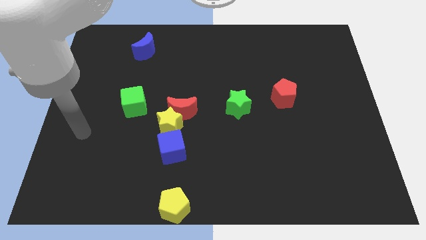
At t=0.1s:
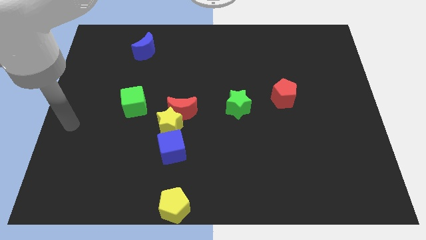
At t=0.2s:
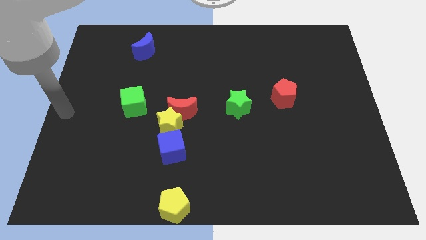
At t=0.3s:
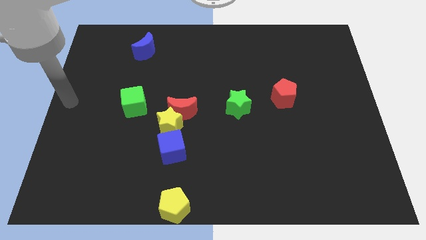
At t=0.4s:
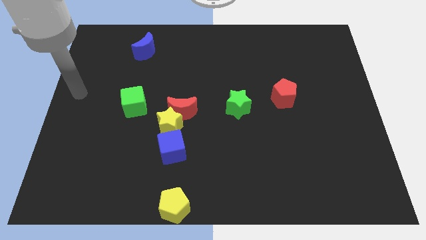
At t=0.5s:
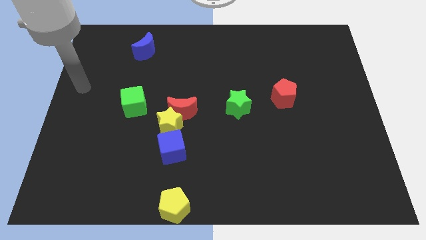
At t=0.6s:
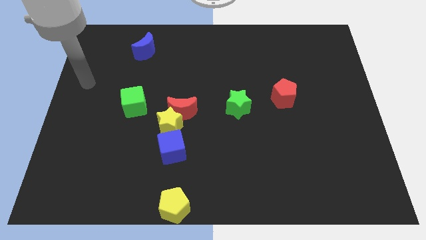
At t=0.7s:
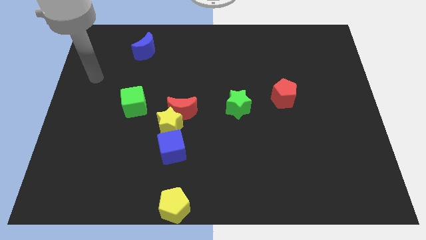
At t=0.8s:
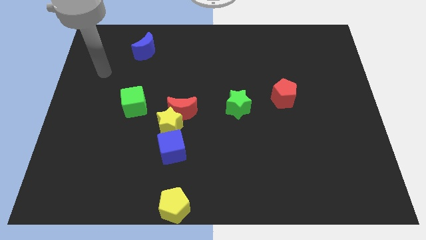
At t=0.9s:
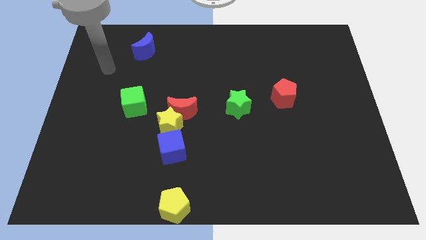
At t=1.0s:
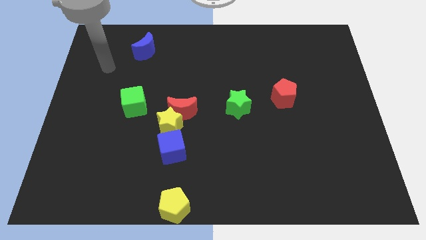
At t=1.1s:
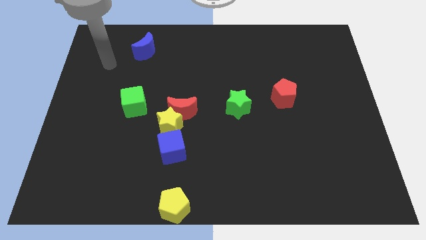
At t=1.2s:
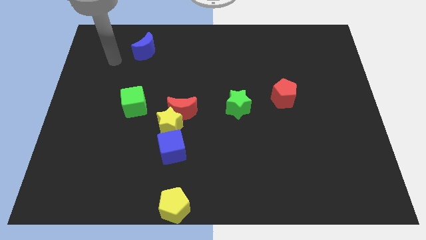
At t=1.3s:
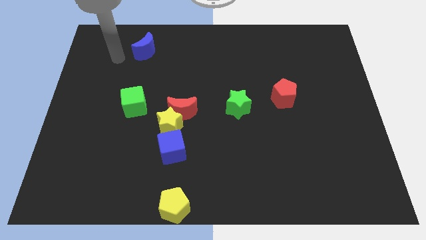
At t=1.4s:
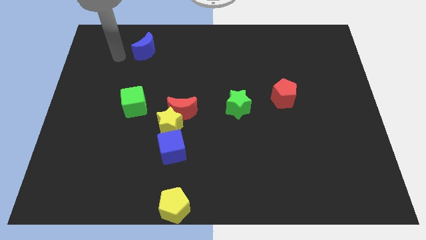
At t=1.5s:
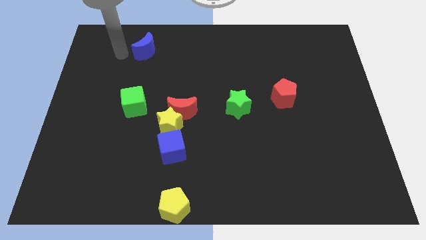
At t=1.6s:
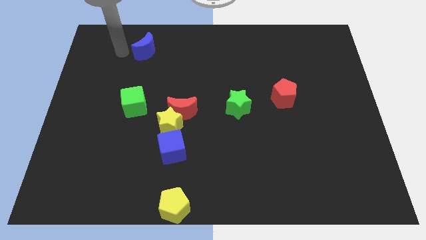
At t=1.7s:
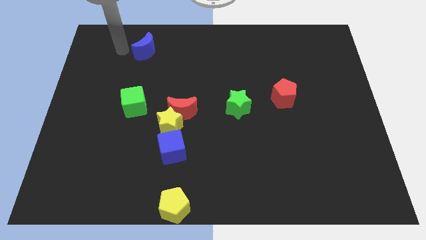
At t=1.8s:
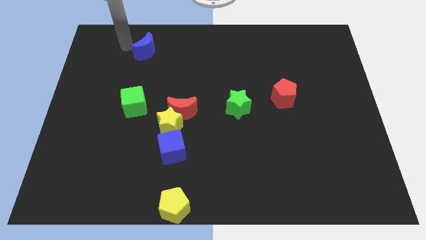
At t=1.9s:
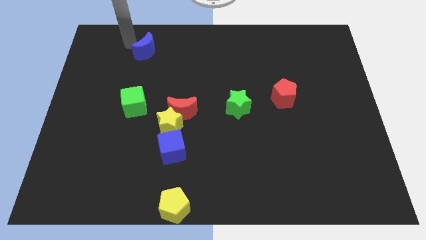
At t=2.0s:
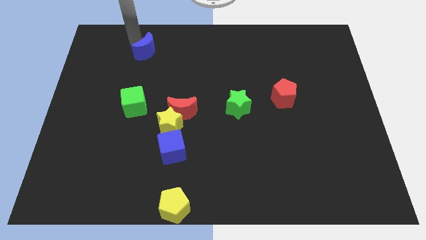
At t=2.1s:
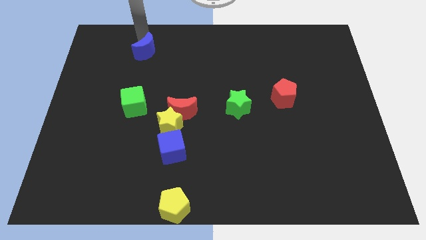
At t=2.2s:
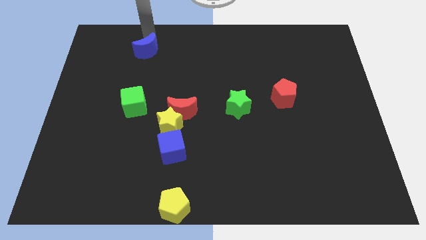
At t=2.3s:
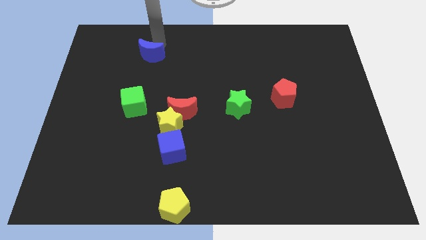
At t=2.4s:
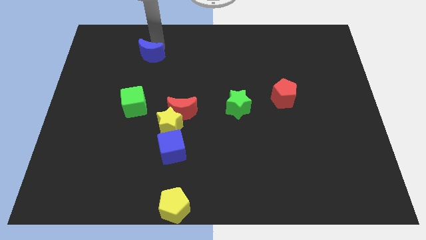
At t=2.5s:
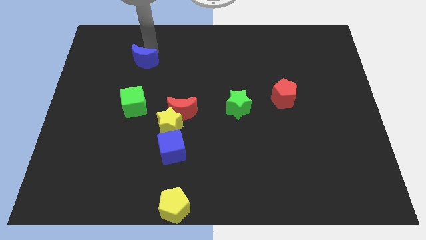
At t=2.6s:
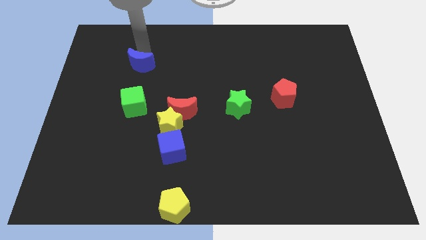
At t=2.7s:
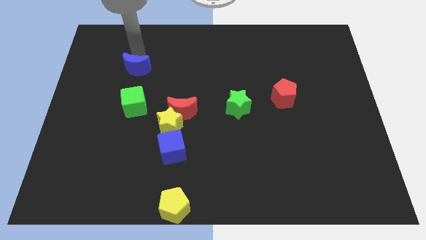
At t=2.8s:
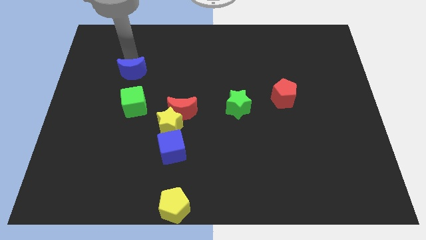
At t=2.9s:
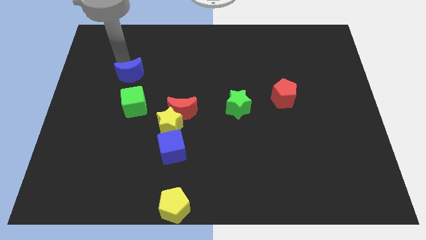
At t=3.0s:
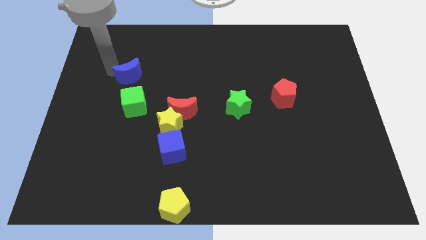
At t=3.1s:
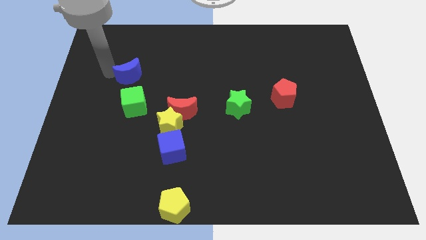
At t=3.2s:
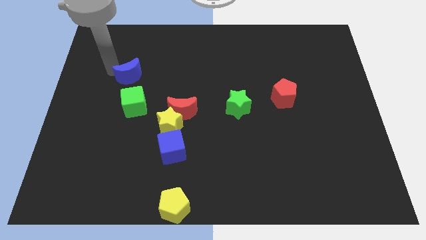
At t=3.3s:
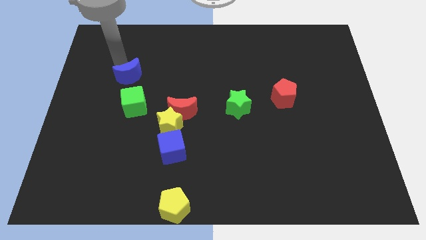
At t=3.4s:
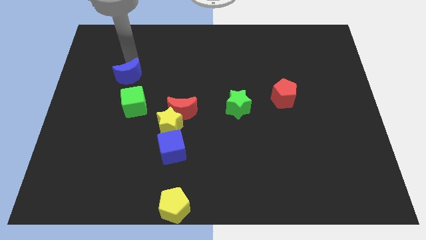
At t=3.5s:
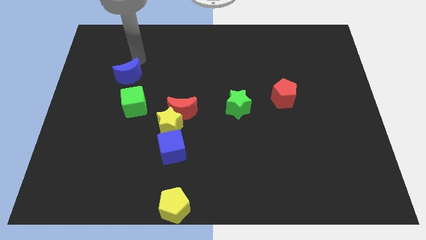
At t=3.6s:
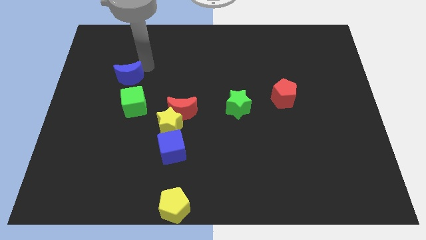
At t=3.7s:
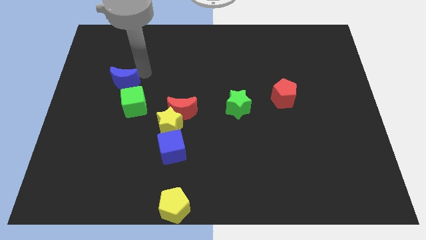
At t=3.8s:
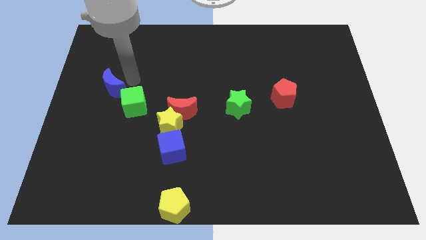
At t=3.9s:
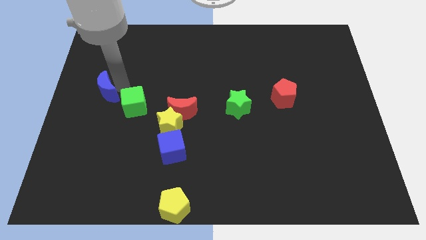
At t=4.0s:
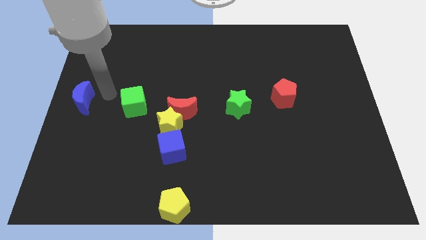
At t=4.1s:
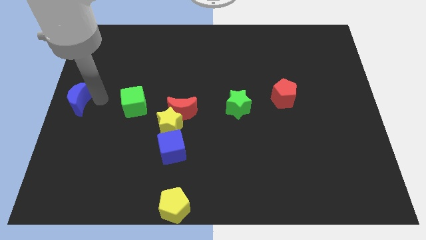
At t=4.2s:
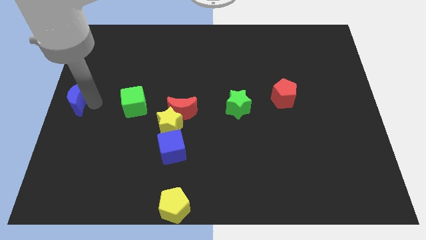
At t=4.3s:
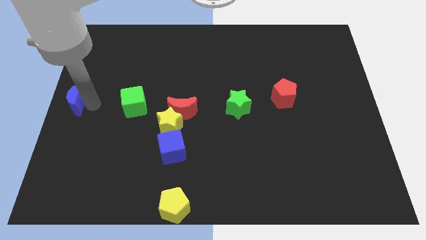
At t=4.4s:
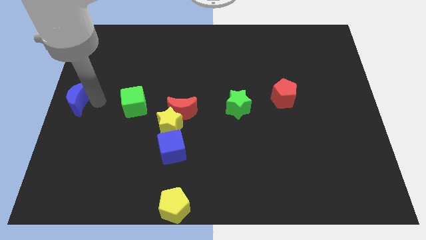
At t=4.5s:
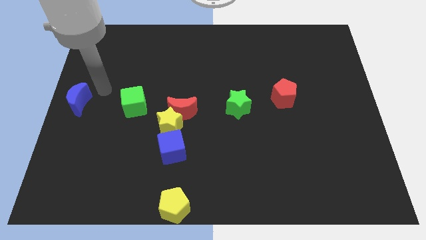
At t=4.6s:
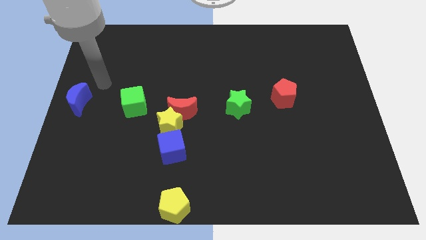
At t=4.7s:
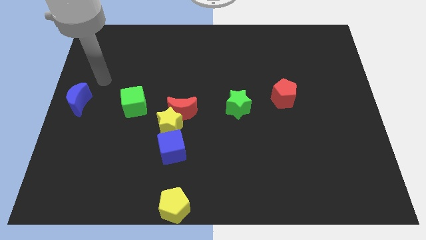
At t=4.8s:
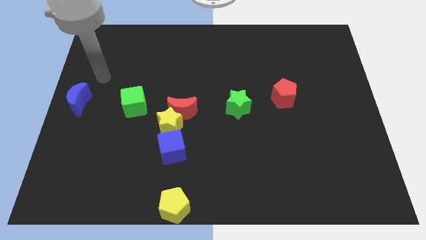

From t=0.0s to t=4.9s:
move the blue moon to the middle left of the board

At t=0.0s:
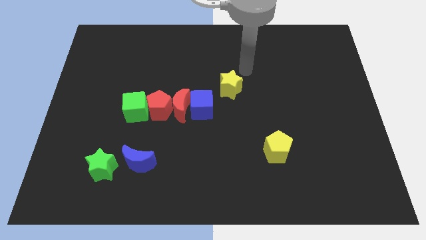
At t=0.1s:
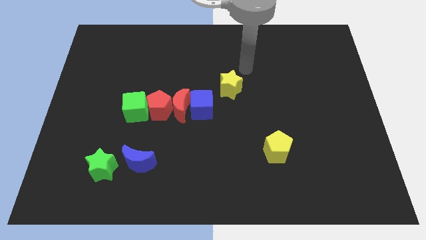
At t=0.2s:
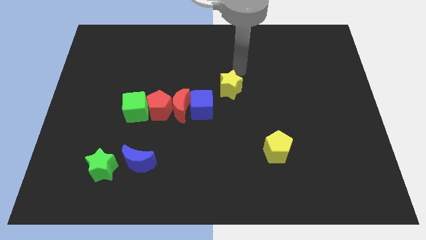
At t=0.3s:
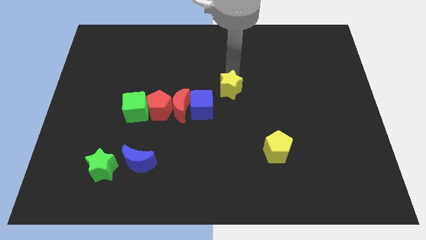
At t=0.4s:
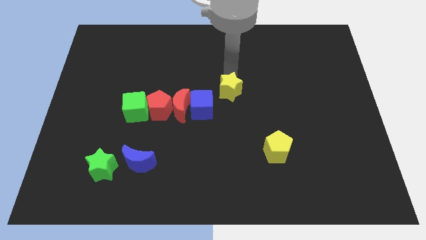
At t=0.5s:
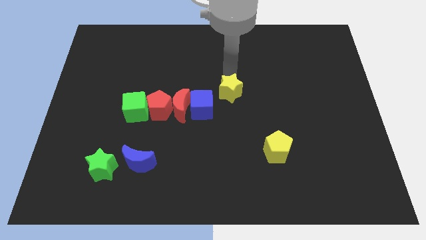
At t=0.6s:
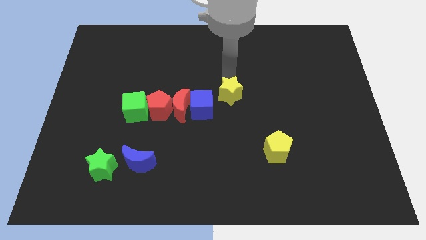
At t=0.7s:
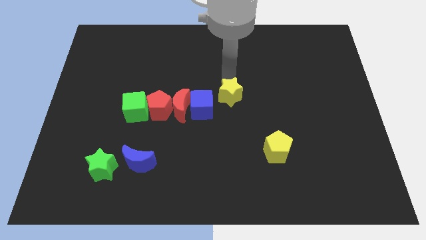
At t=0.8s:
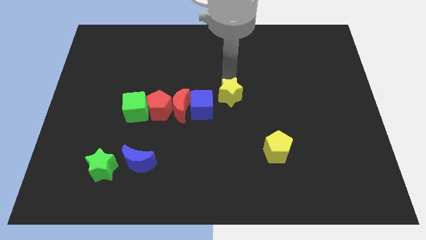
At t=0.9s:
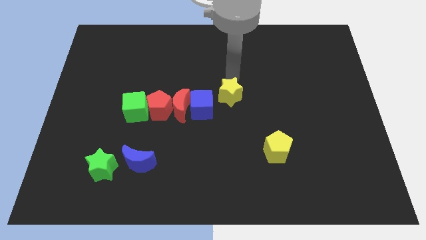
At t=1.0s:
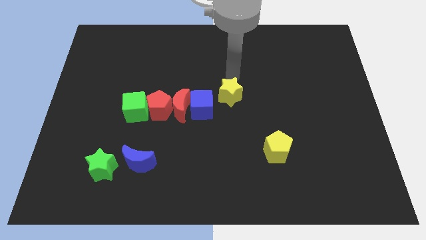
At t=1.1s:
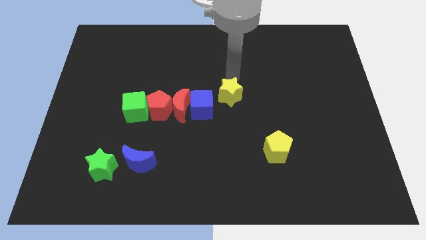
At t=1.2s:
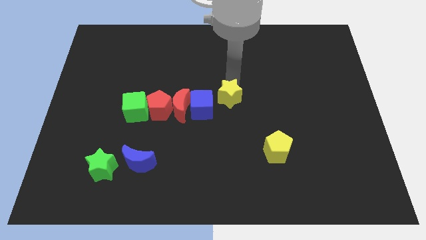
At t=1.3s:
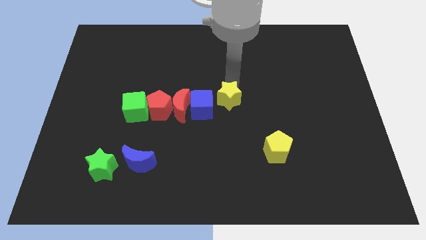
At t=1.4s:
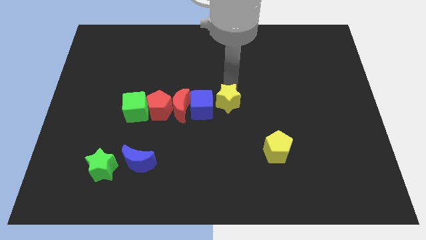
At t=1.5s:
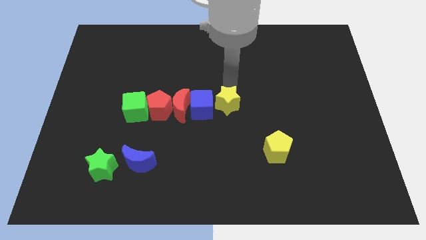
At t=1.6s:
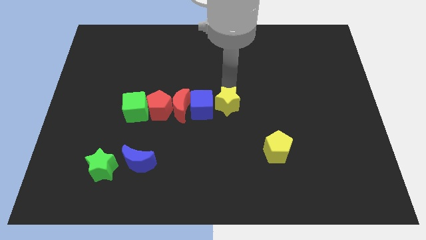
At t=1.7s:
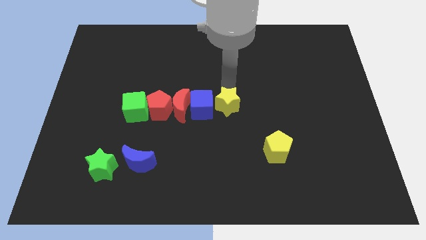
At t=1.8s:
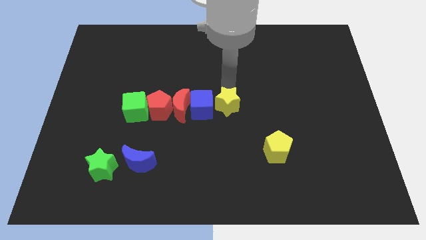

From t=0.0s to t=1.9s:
place the yellow star at the right side of the blue cube

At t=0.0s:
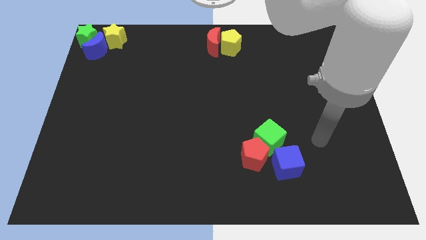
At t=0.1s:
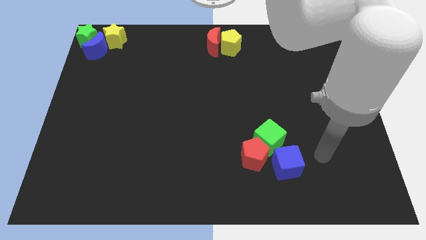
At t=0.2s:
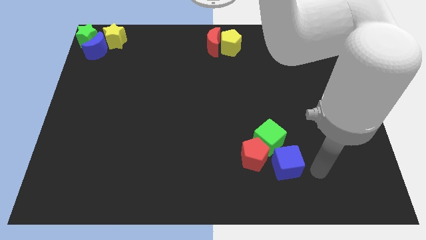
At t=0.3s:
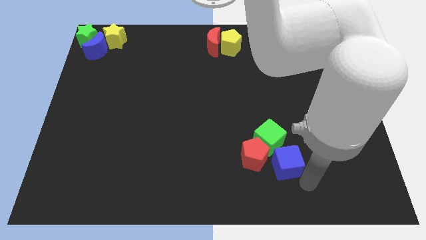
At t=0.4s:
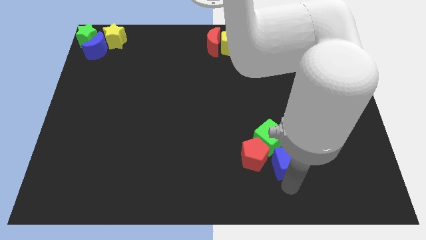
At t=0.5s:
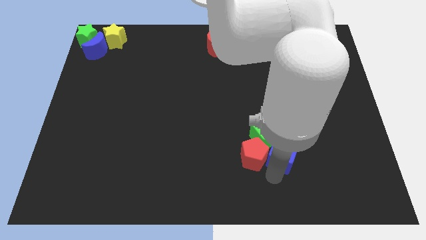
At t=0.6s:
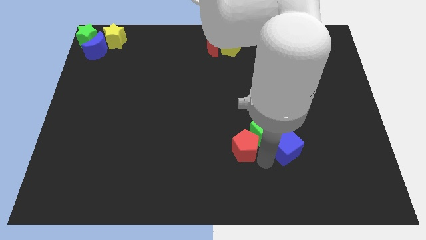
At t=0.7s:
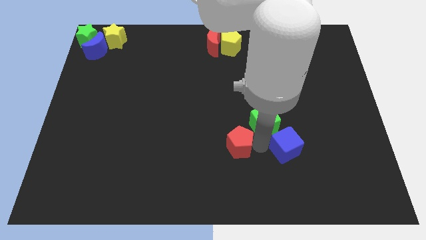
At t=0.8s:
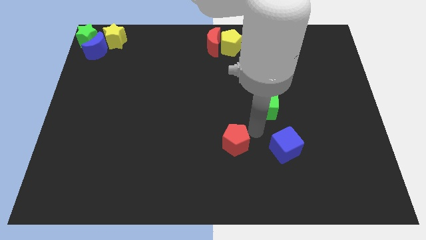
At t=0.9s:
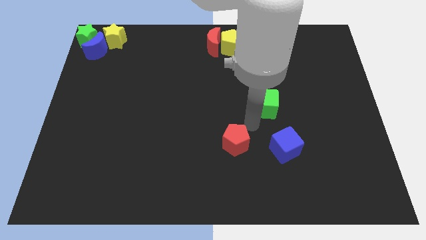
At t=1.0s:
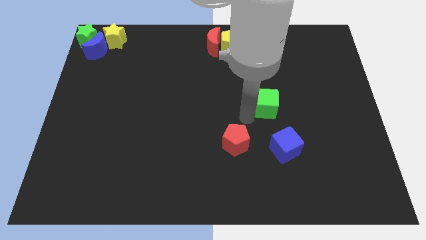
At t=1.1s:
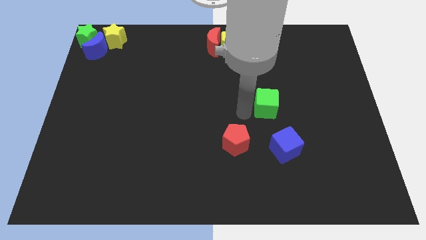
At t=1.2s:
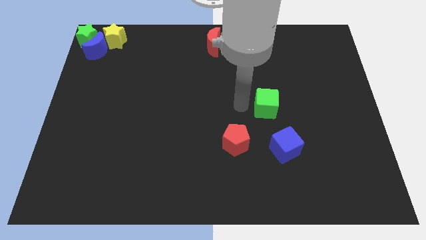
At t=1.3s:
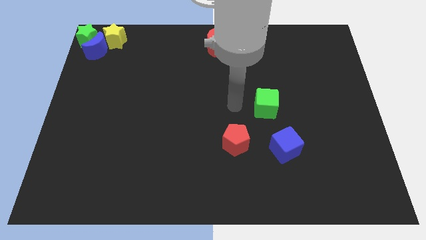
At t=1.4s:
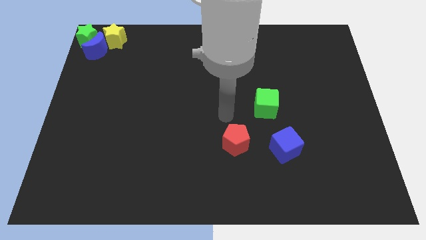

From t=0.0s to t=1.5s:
move red pentagon green cube and blue blocks apart

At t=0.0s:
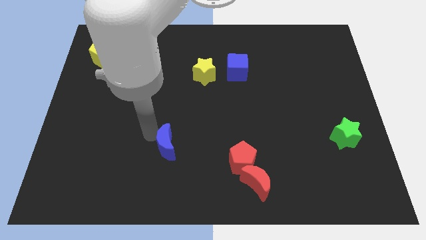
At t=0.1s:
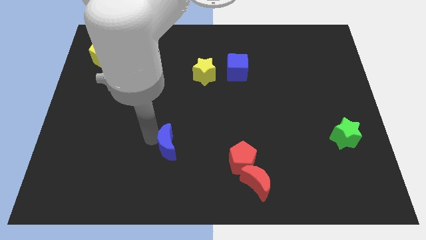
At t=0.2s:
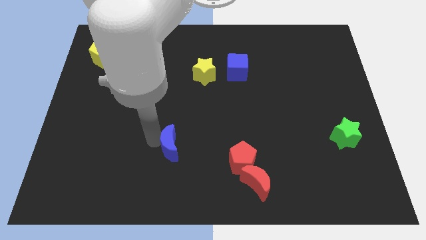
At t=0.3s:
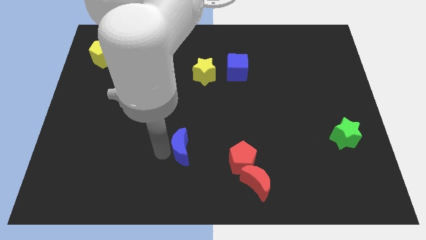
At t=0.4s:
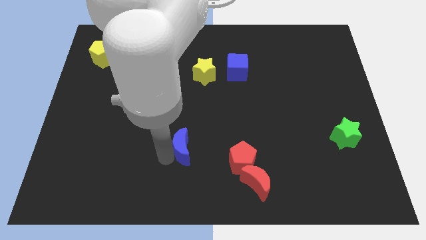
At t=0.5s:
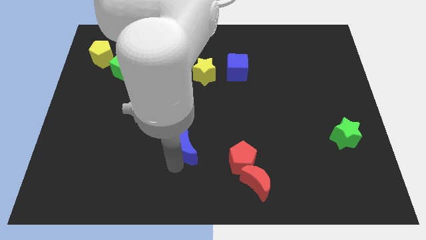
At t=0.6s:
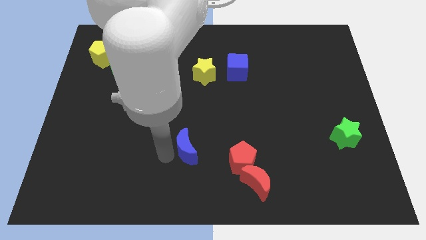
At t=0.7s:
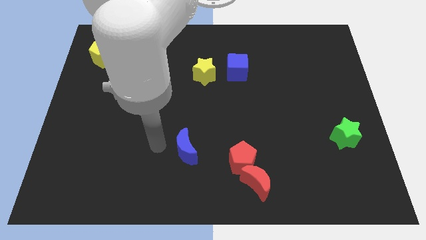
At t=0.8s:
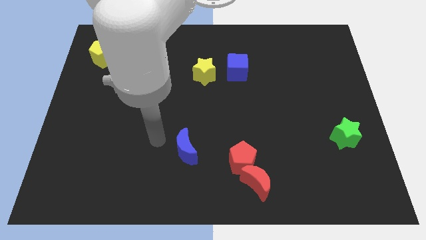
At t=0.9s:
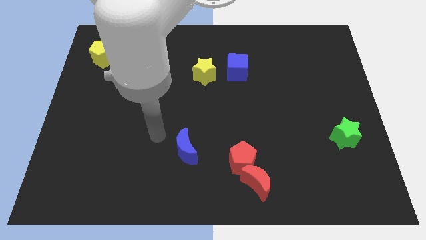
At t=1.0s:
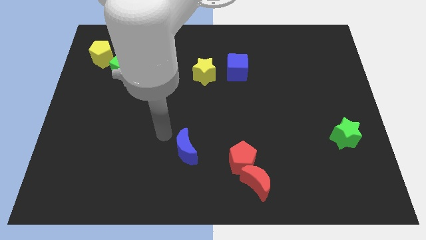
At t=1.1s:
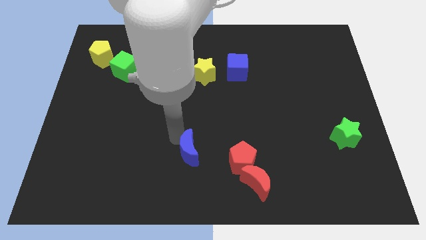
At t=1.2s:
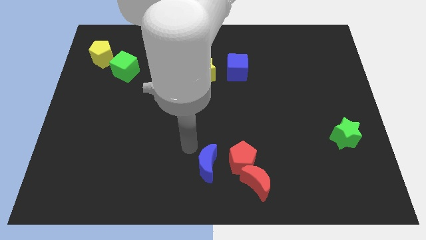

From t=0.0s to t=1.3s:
place blue moon to the bottom of the yellow star
